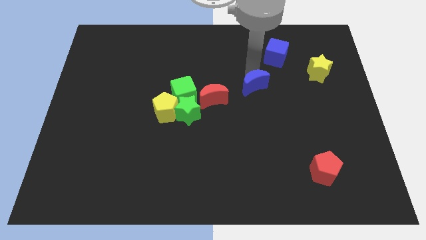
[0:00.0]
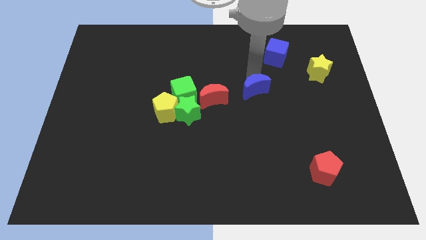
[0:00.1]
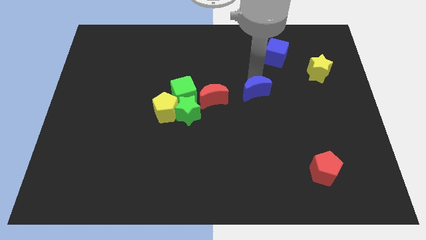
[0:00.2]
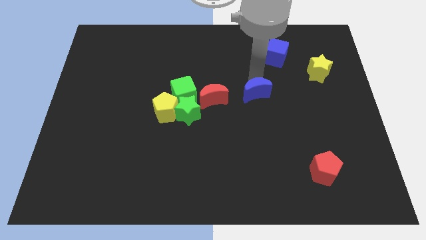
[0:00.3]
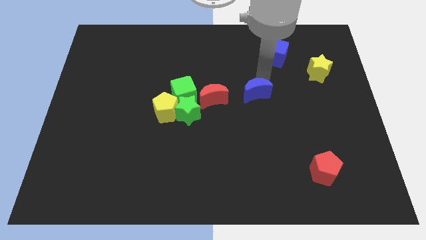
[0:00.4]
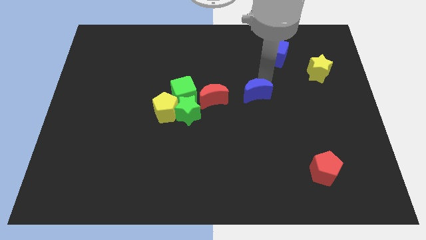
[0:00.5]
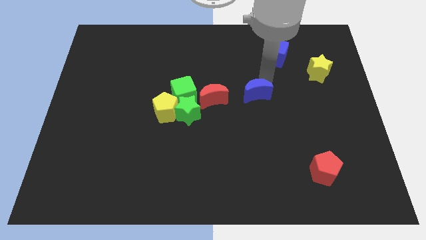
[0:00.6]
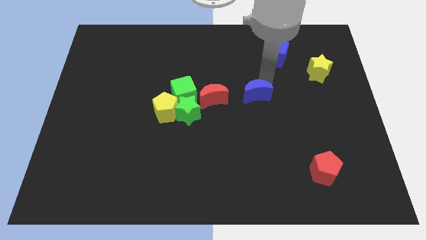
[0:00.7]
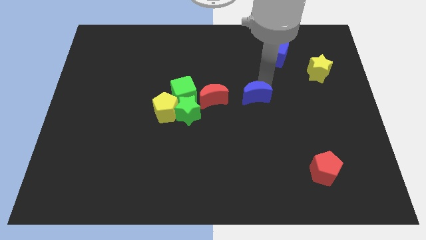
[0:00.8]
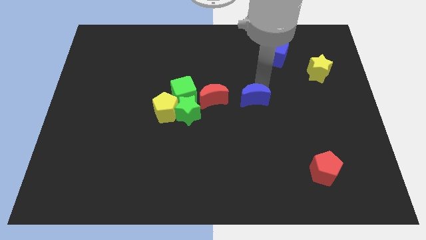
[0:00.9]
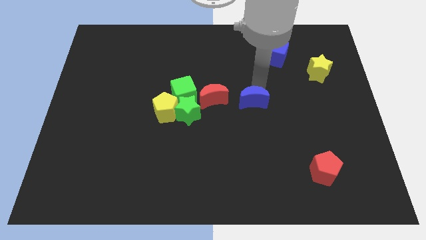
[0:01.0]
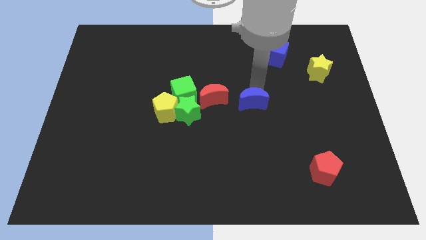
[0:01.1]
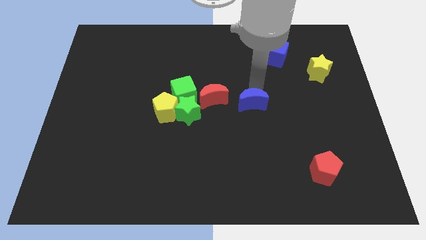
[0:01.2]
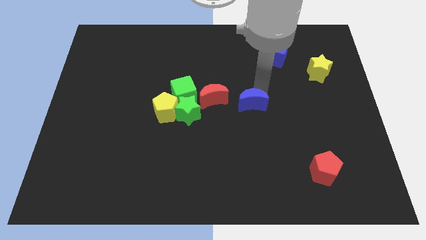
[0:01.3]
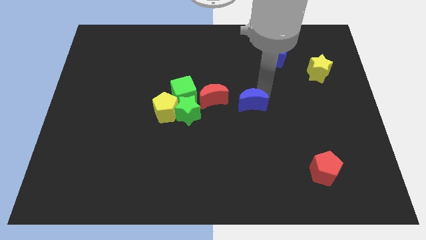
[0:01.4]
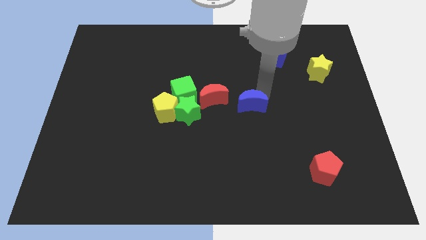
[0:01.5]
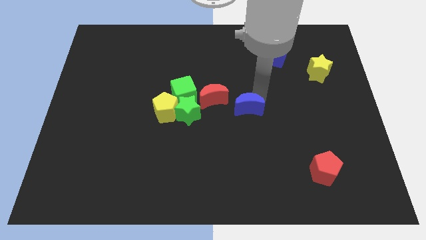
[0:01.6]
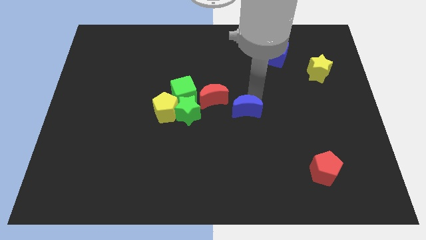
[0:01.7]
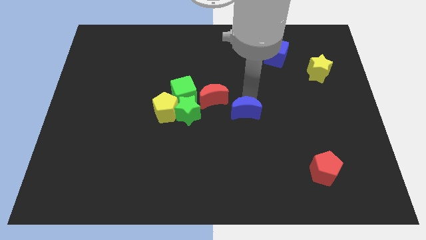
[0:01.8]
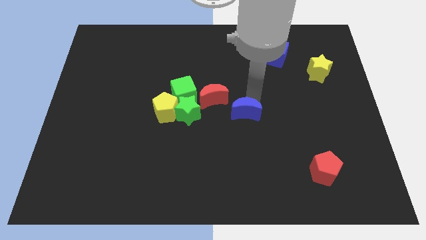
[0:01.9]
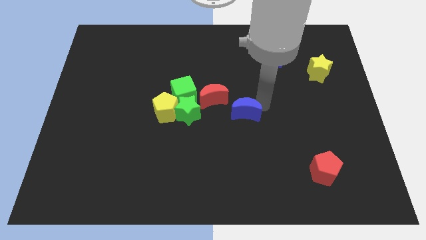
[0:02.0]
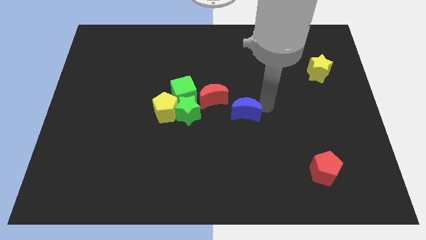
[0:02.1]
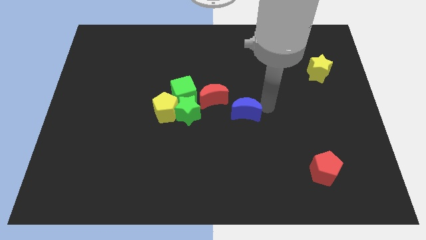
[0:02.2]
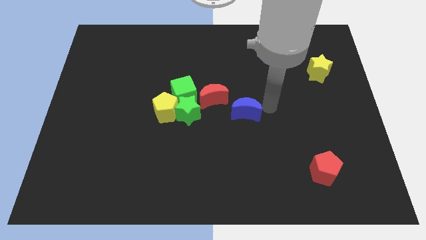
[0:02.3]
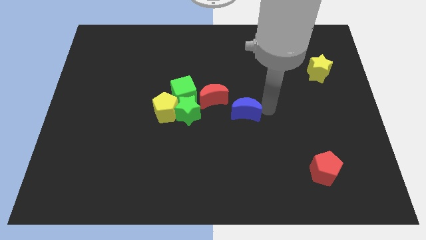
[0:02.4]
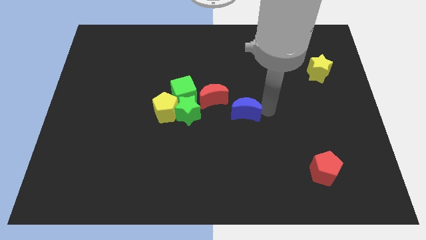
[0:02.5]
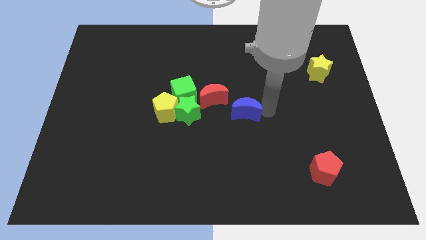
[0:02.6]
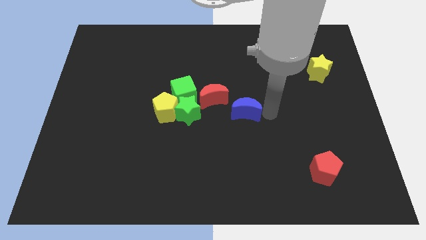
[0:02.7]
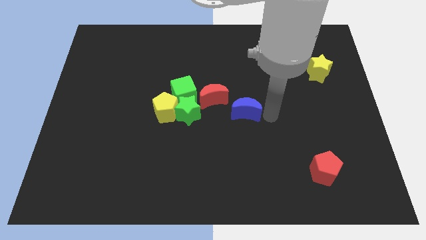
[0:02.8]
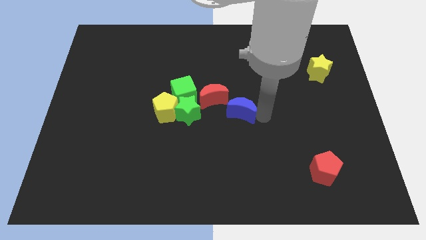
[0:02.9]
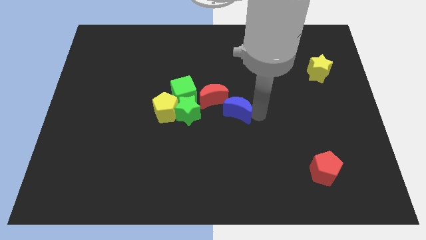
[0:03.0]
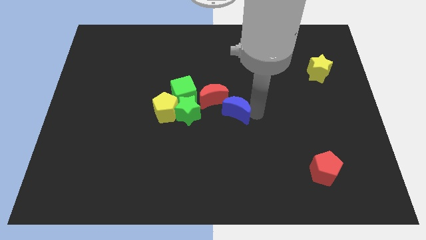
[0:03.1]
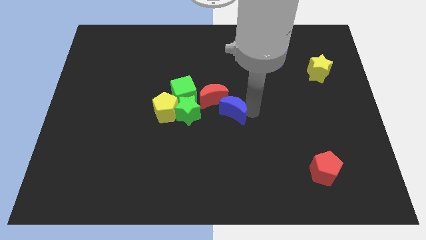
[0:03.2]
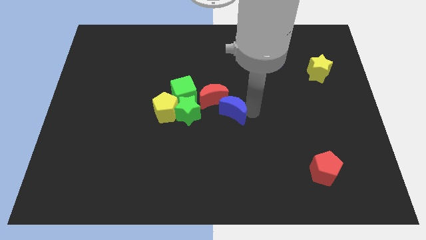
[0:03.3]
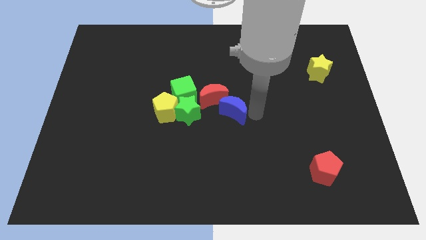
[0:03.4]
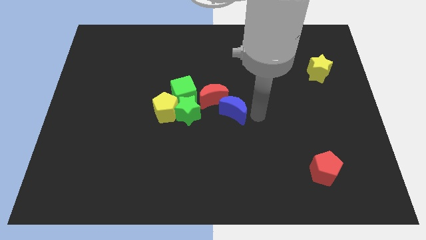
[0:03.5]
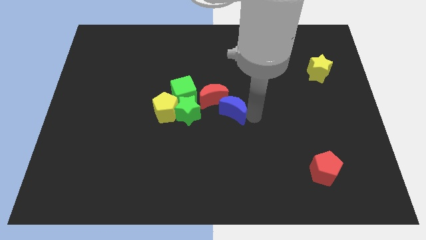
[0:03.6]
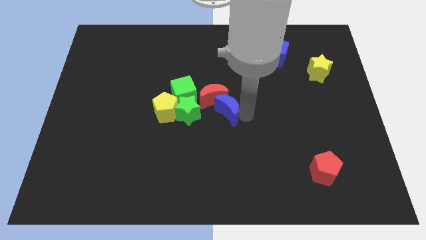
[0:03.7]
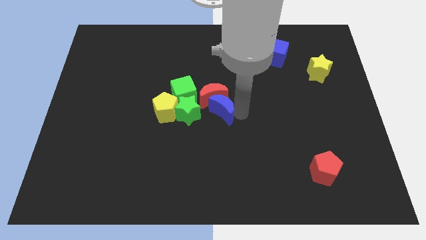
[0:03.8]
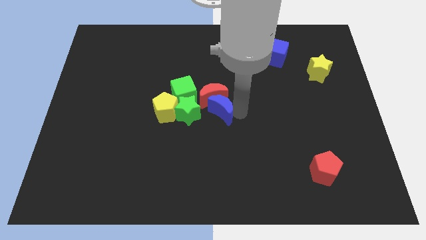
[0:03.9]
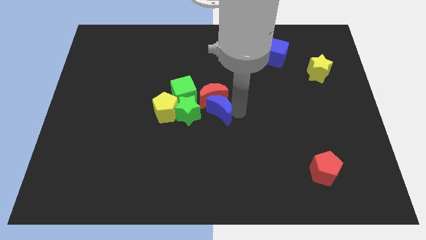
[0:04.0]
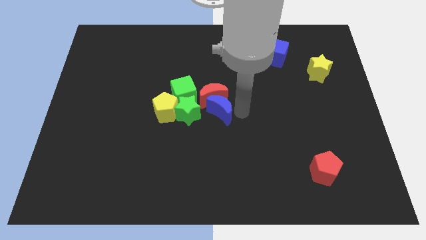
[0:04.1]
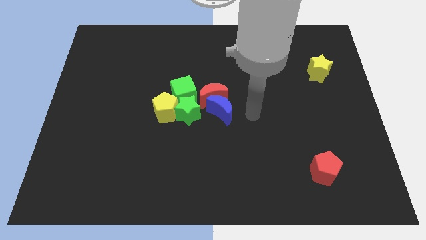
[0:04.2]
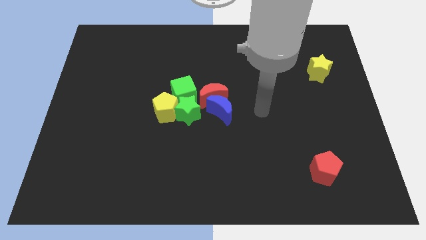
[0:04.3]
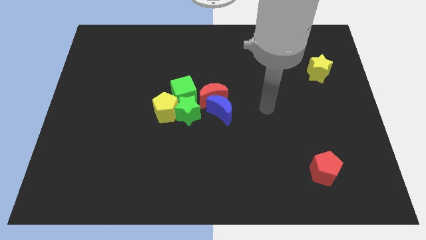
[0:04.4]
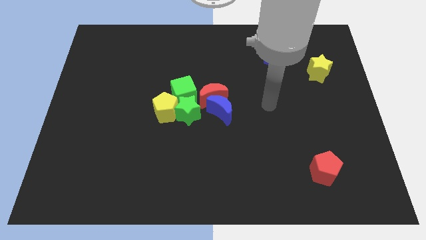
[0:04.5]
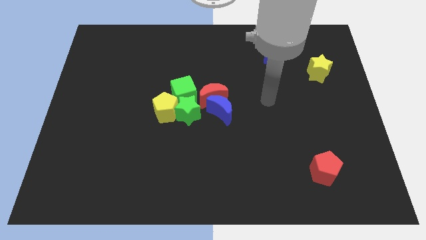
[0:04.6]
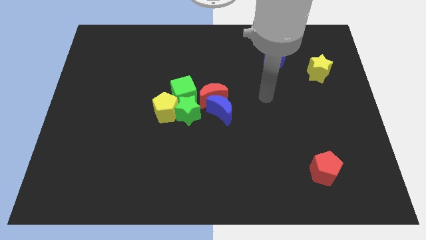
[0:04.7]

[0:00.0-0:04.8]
place the blue crescent below the red crescent

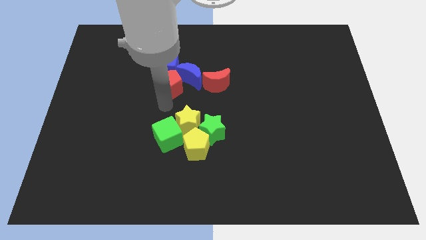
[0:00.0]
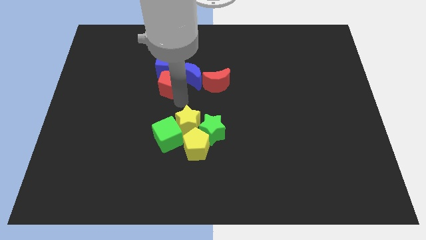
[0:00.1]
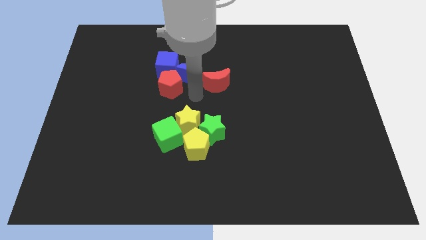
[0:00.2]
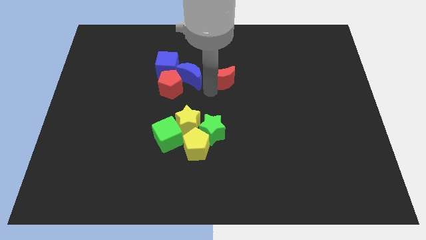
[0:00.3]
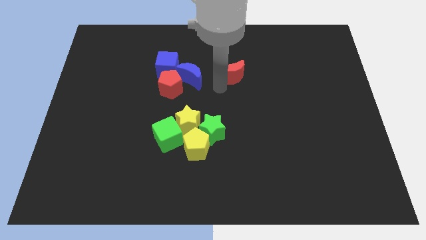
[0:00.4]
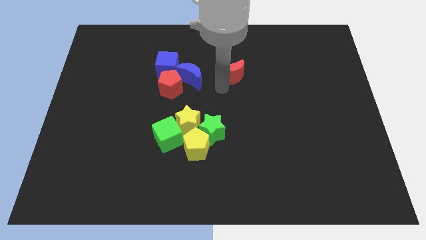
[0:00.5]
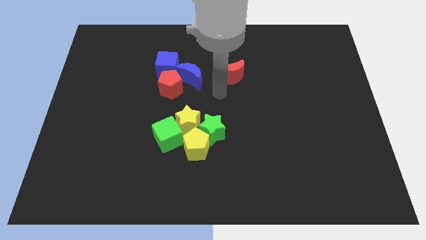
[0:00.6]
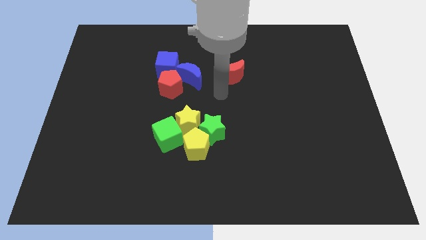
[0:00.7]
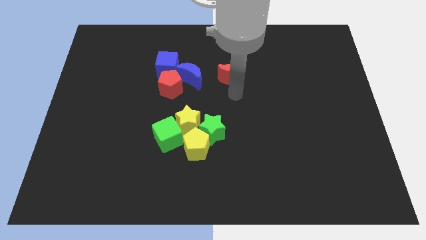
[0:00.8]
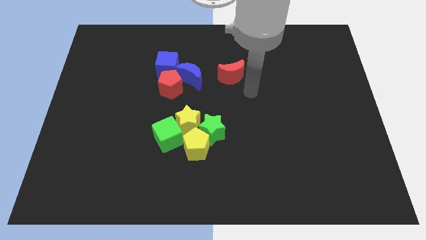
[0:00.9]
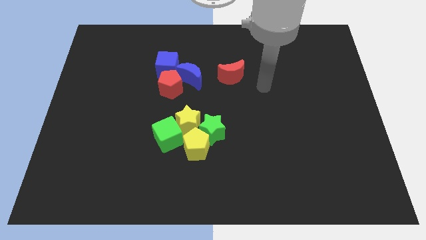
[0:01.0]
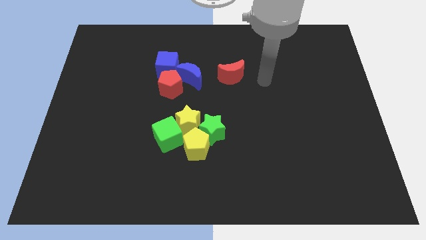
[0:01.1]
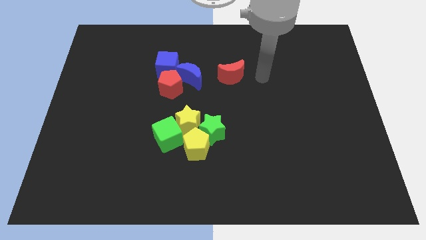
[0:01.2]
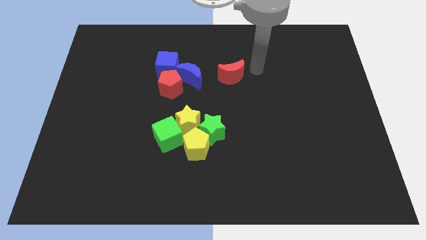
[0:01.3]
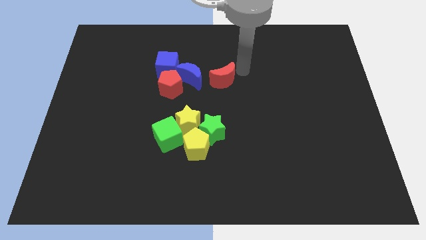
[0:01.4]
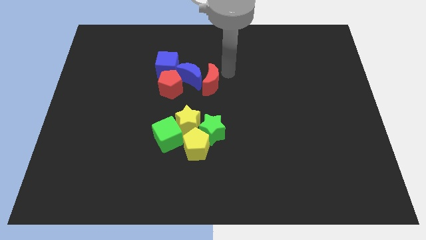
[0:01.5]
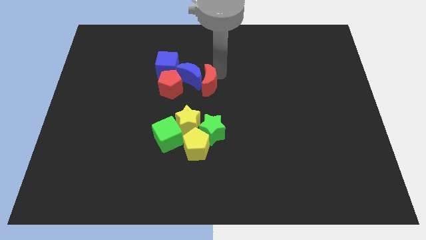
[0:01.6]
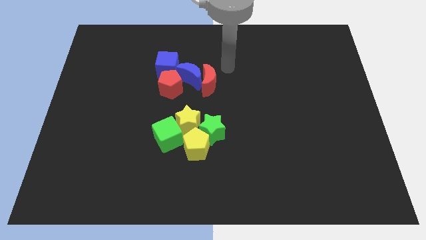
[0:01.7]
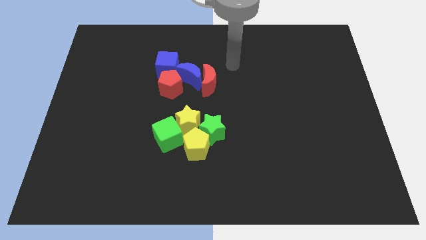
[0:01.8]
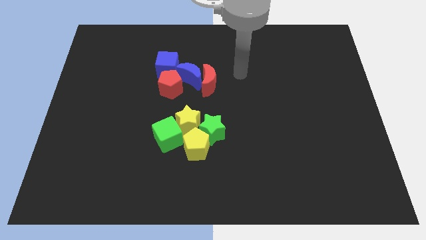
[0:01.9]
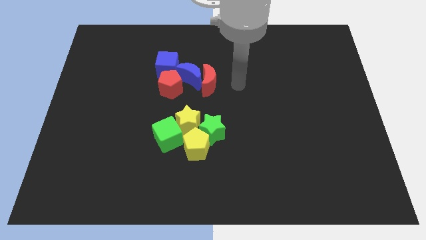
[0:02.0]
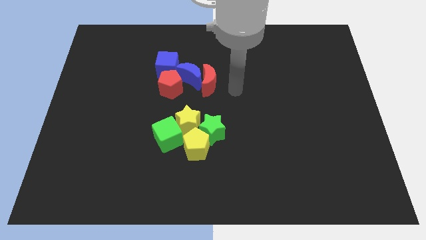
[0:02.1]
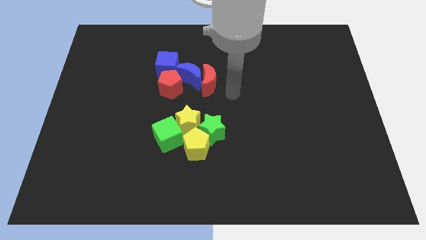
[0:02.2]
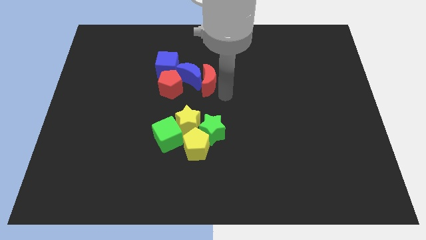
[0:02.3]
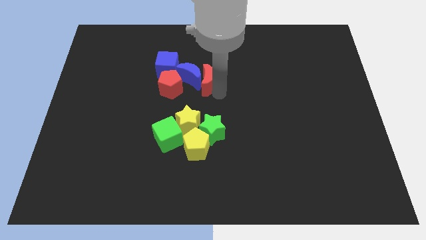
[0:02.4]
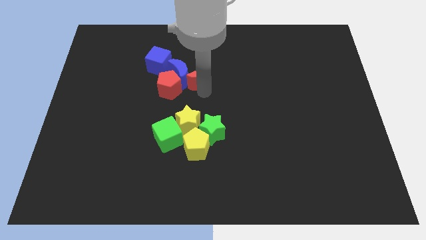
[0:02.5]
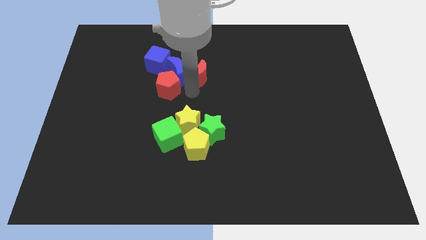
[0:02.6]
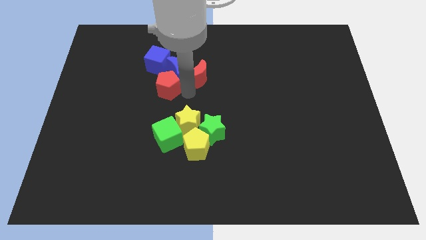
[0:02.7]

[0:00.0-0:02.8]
push the red and blue blocks towards the left side of the board

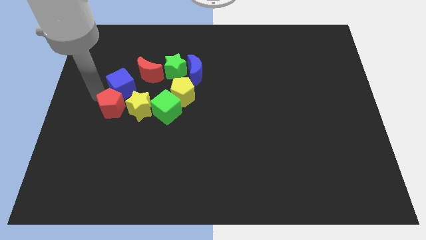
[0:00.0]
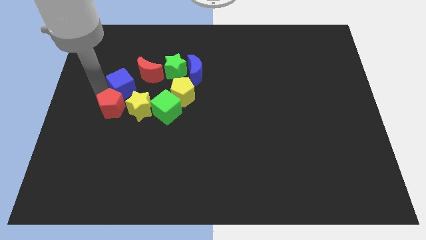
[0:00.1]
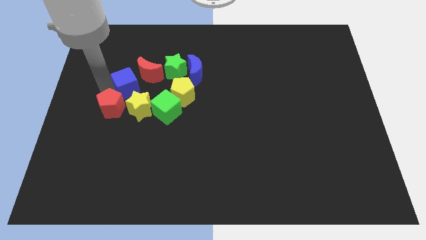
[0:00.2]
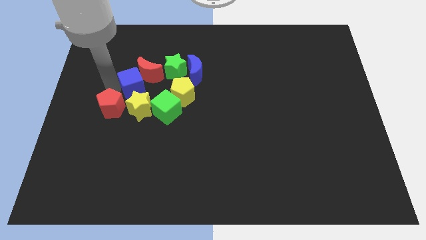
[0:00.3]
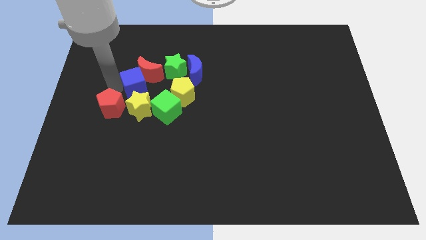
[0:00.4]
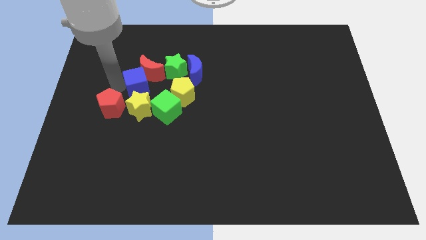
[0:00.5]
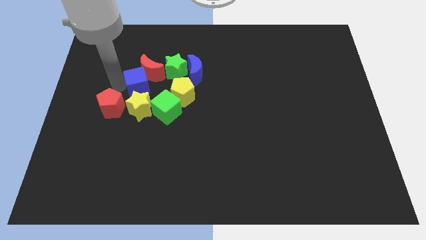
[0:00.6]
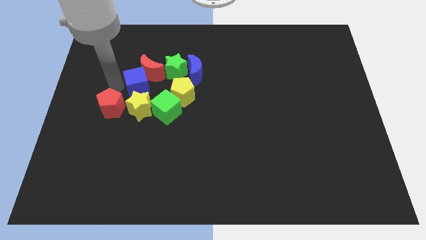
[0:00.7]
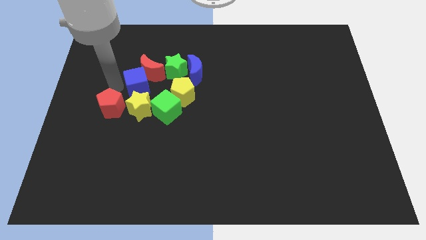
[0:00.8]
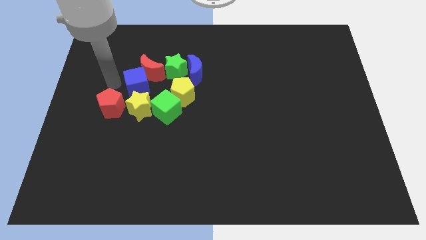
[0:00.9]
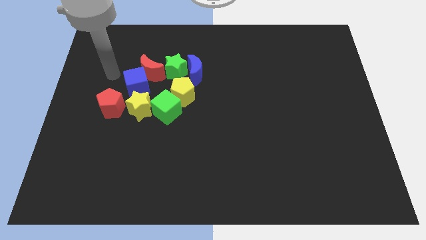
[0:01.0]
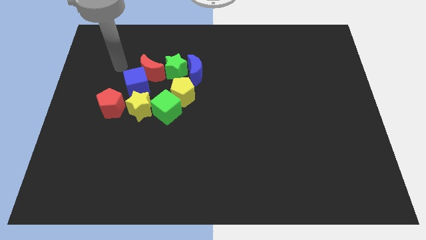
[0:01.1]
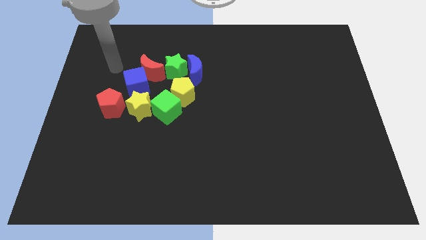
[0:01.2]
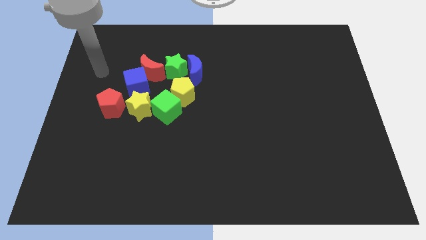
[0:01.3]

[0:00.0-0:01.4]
move blue cube in between red crescent and yellow star

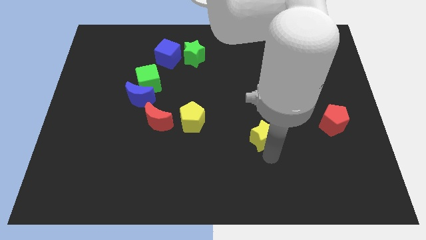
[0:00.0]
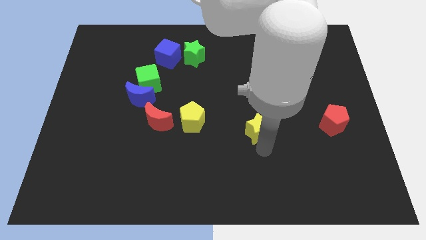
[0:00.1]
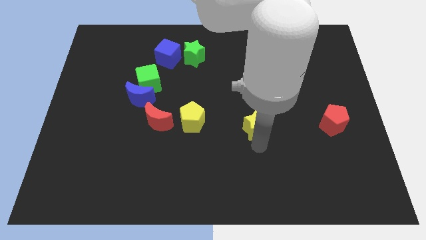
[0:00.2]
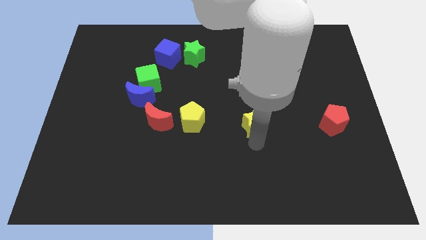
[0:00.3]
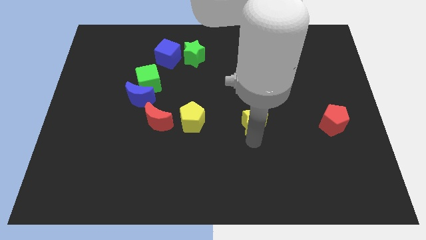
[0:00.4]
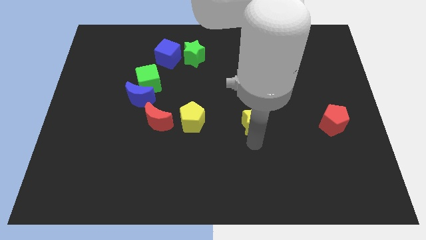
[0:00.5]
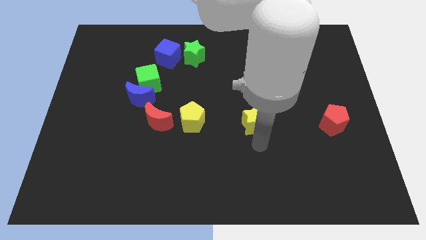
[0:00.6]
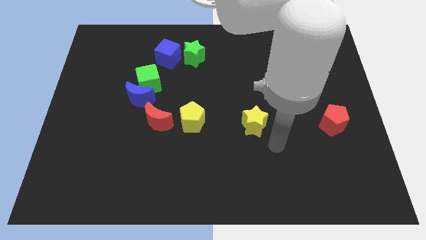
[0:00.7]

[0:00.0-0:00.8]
place the yellow star right to the yellow pentagon
